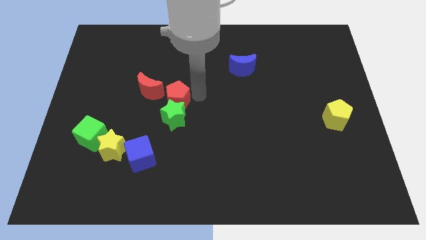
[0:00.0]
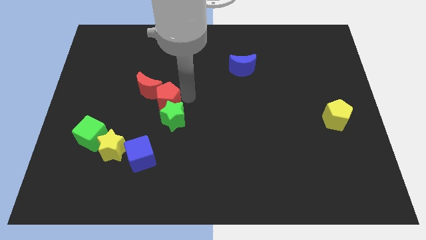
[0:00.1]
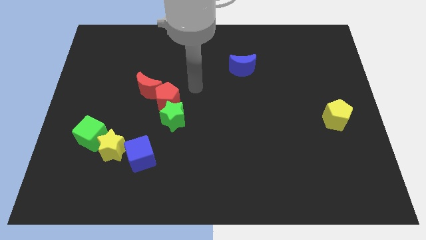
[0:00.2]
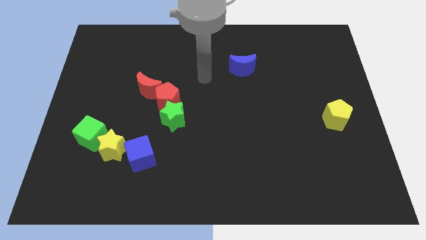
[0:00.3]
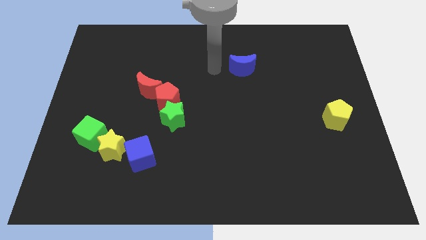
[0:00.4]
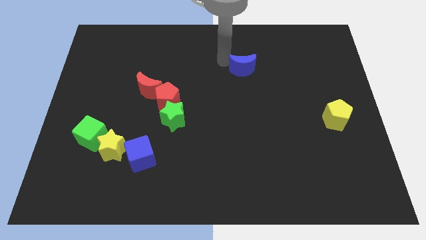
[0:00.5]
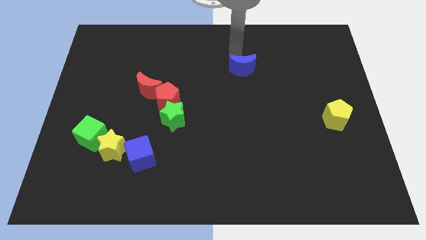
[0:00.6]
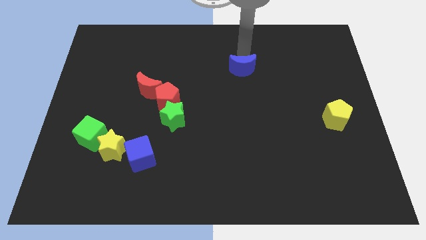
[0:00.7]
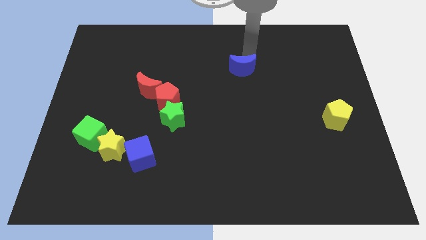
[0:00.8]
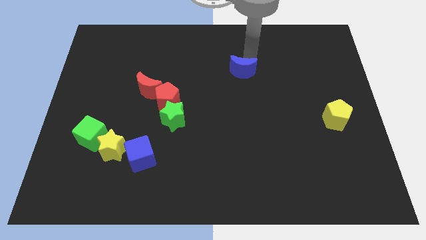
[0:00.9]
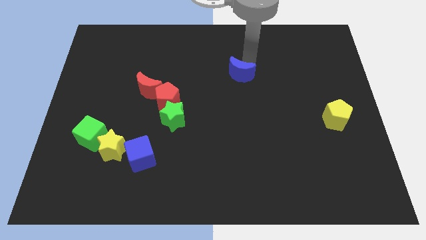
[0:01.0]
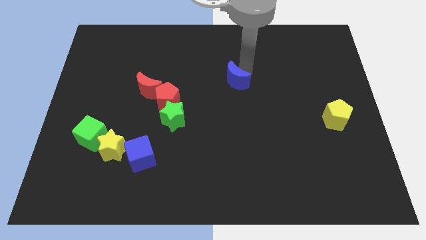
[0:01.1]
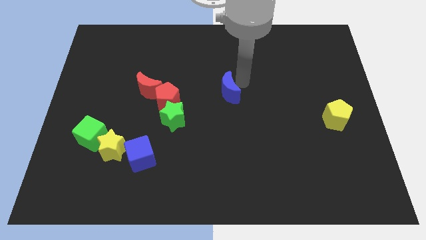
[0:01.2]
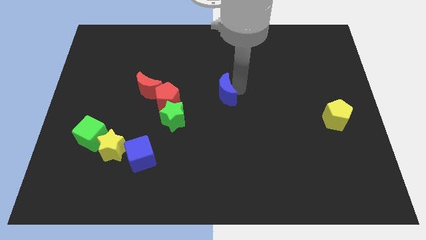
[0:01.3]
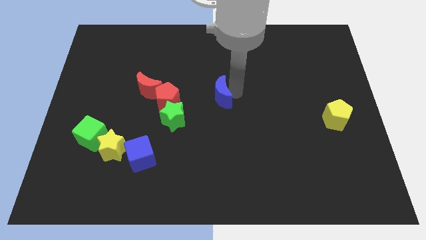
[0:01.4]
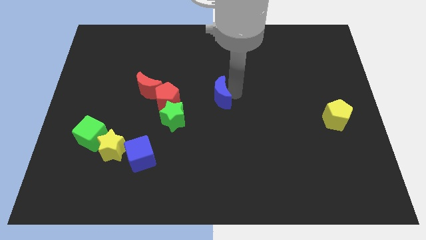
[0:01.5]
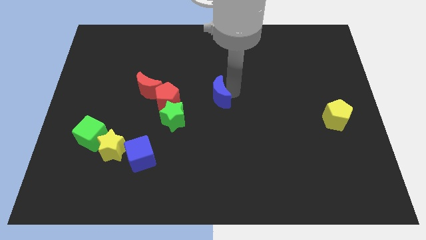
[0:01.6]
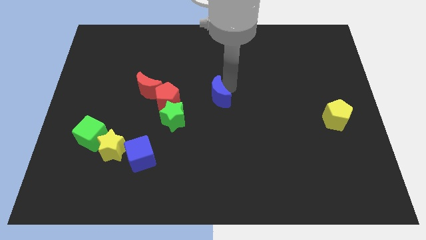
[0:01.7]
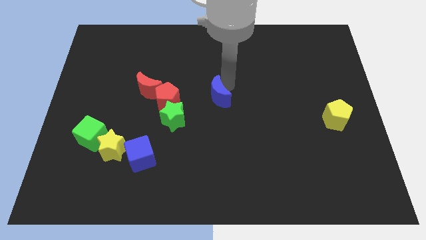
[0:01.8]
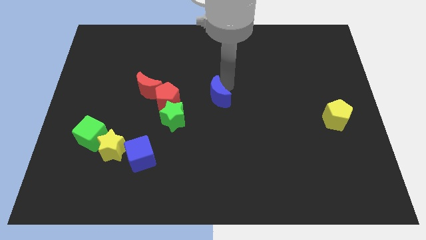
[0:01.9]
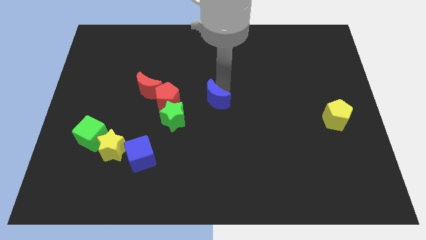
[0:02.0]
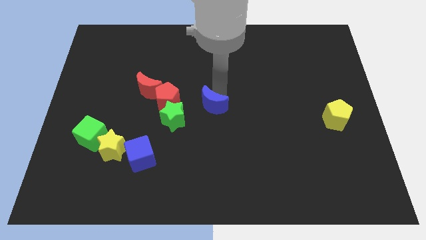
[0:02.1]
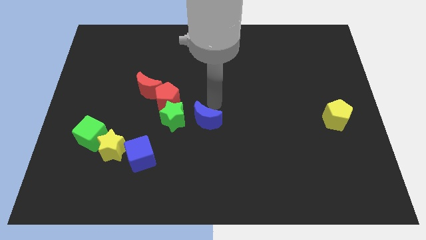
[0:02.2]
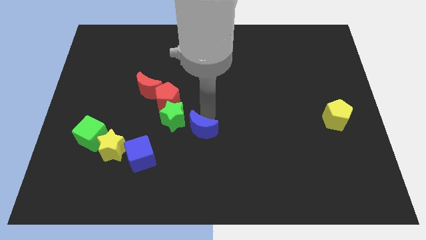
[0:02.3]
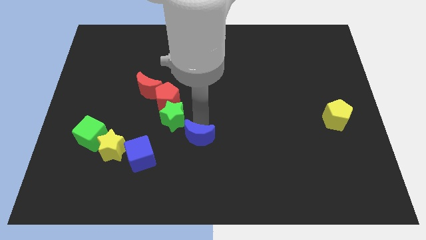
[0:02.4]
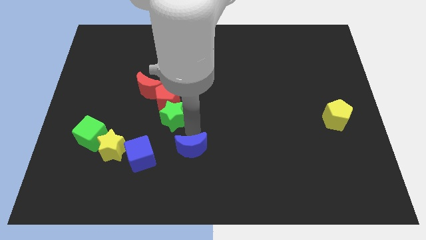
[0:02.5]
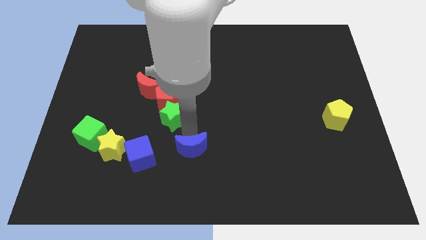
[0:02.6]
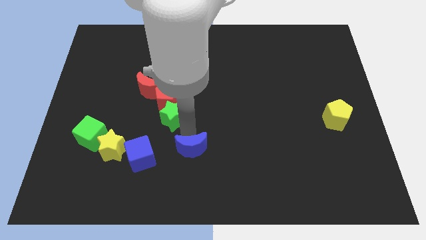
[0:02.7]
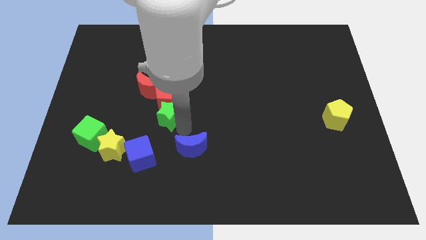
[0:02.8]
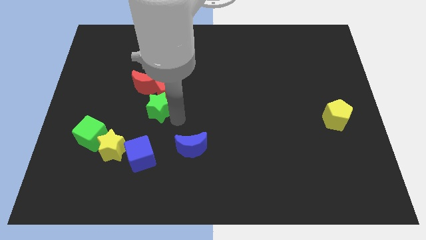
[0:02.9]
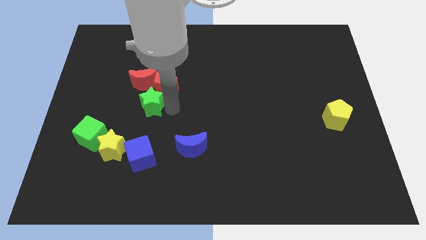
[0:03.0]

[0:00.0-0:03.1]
place the blue moon to the bottom center of the board

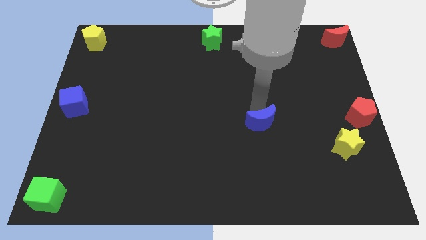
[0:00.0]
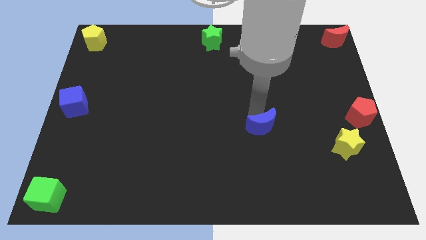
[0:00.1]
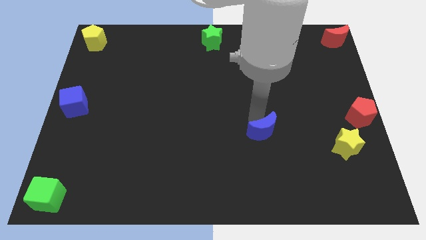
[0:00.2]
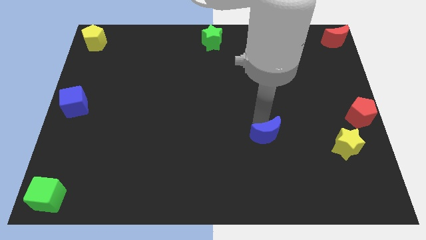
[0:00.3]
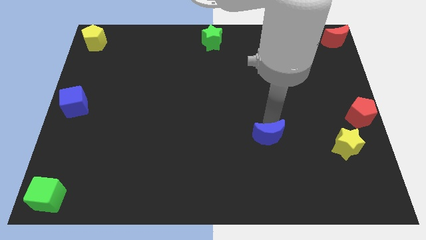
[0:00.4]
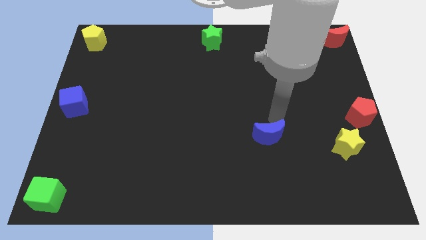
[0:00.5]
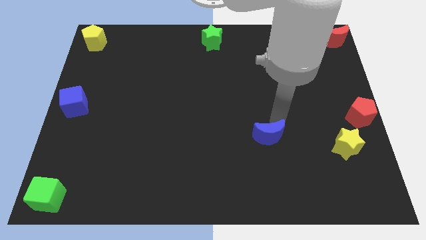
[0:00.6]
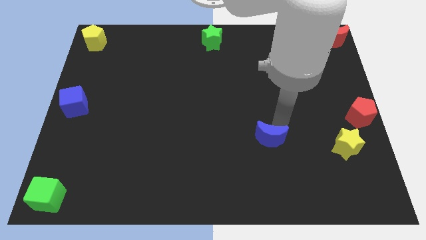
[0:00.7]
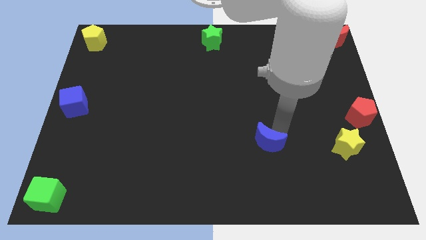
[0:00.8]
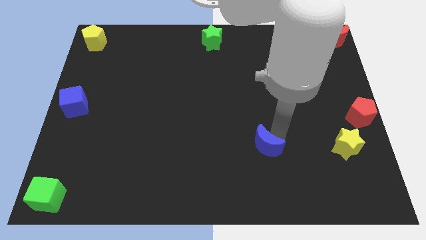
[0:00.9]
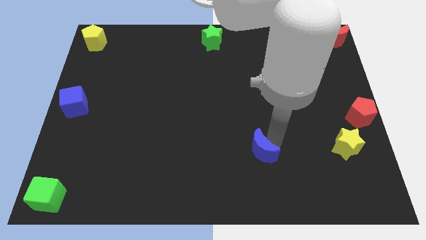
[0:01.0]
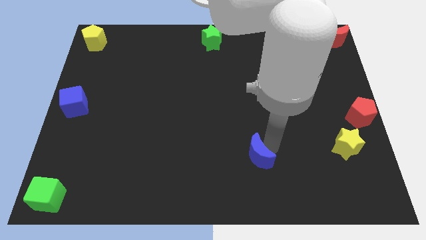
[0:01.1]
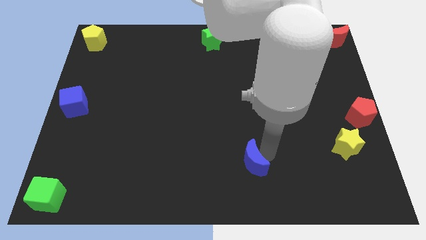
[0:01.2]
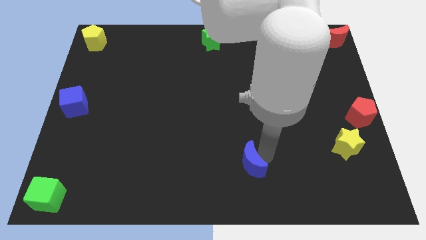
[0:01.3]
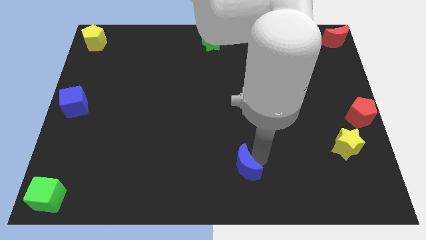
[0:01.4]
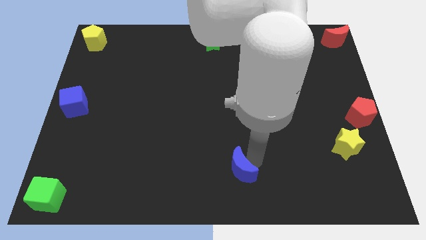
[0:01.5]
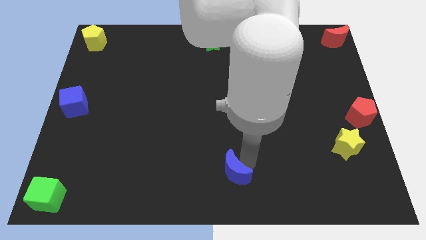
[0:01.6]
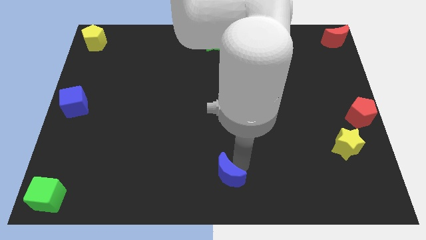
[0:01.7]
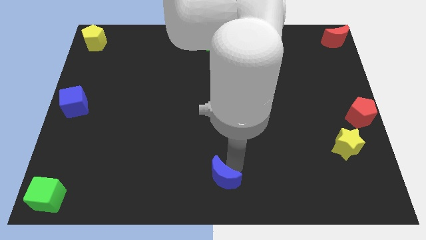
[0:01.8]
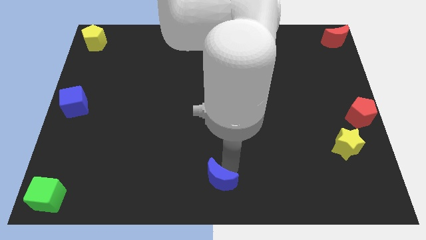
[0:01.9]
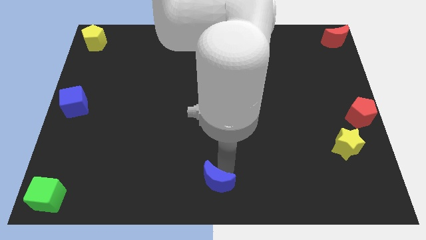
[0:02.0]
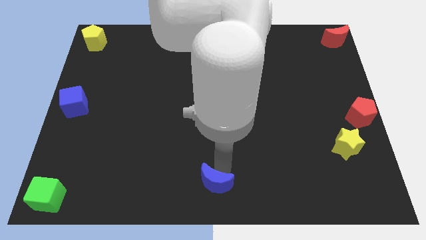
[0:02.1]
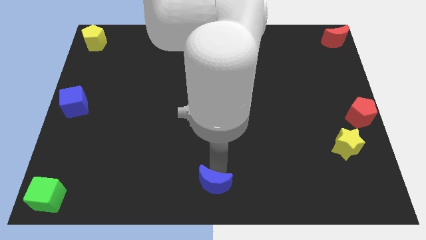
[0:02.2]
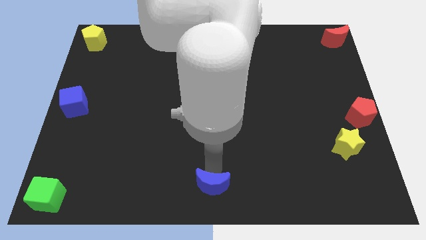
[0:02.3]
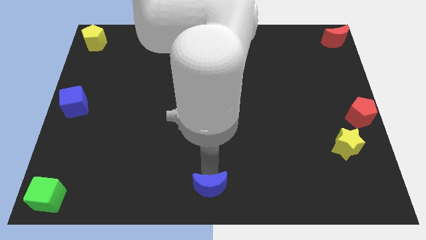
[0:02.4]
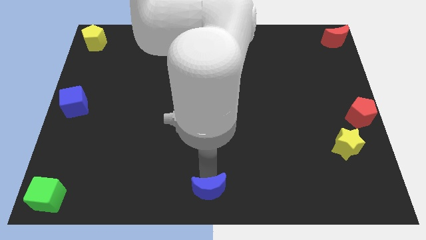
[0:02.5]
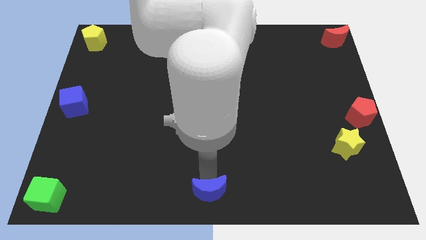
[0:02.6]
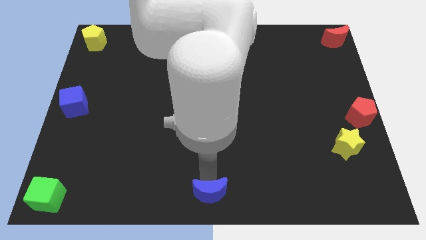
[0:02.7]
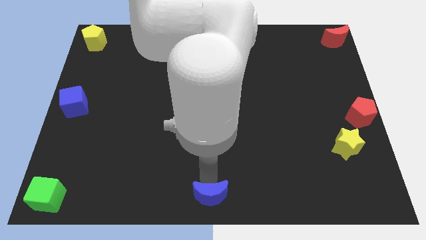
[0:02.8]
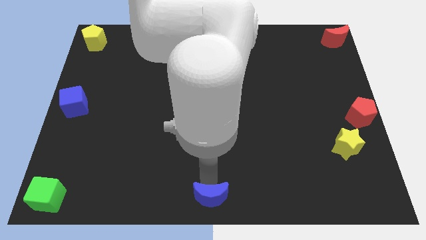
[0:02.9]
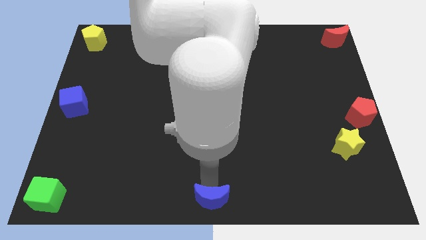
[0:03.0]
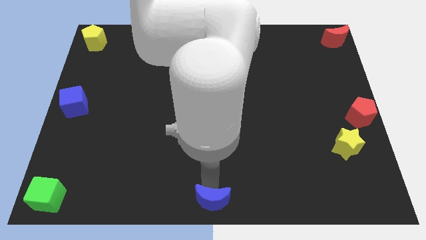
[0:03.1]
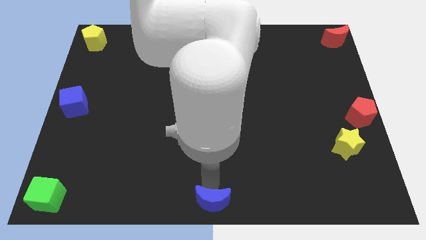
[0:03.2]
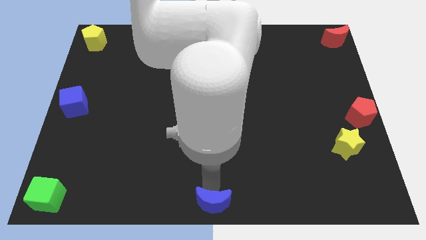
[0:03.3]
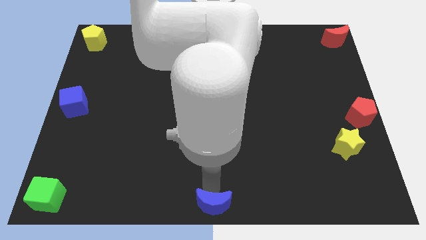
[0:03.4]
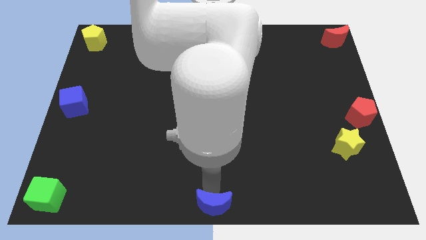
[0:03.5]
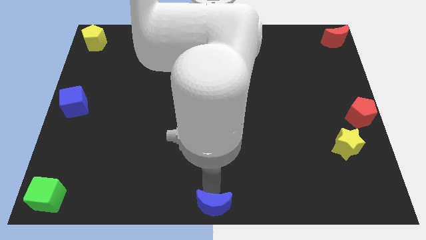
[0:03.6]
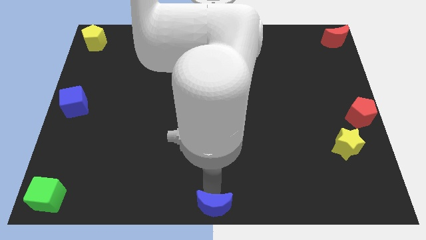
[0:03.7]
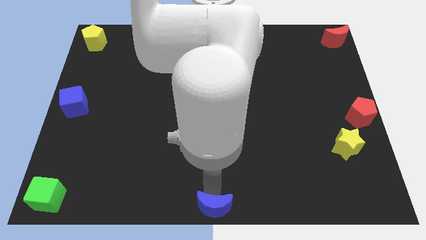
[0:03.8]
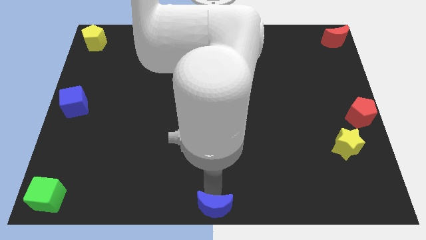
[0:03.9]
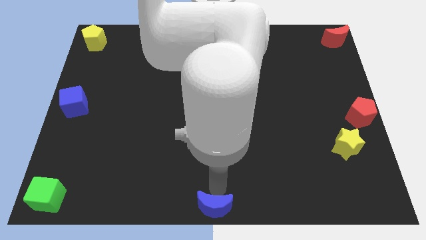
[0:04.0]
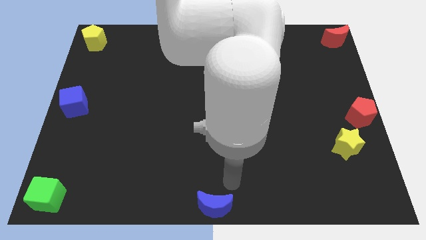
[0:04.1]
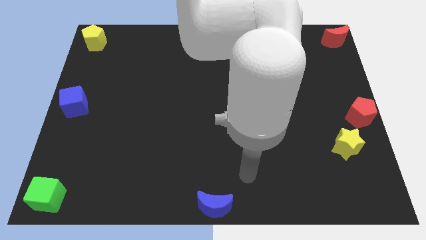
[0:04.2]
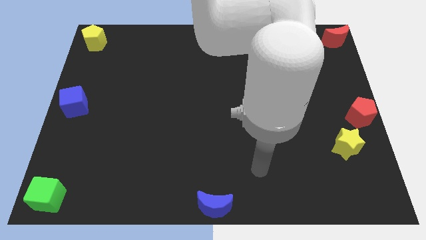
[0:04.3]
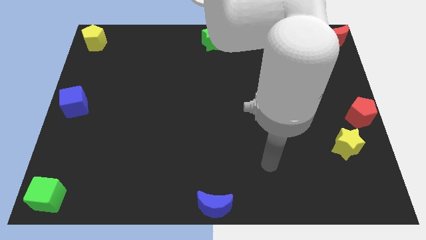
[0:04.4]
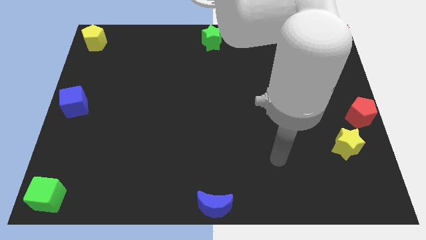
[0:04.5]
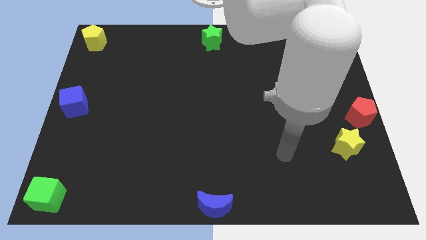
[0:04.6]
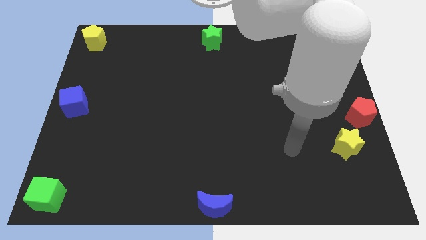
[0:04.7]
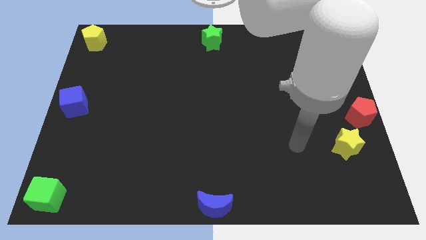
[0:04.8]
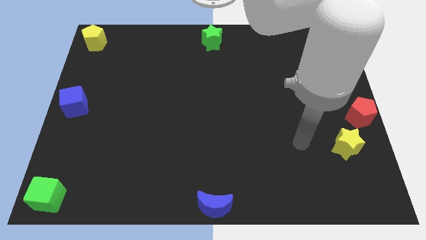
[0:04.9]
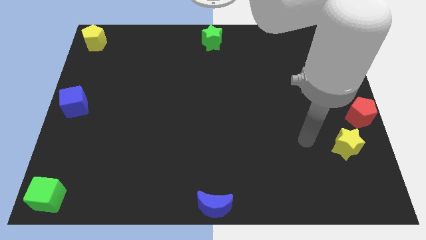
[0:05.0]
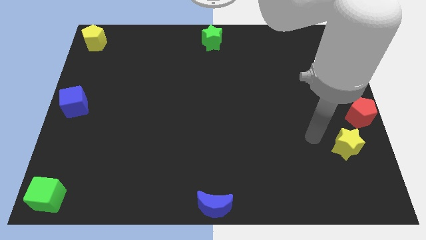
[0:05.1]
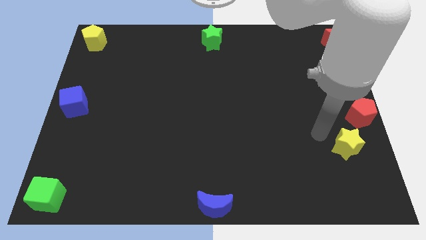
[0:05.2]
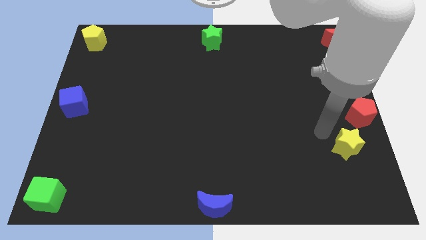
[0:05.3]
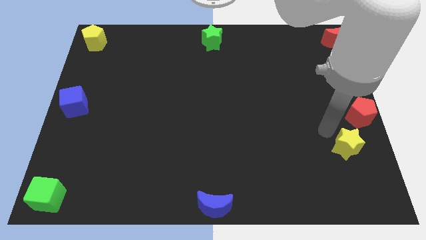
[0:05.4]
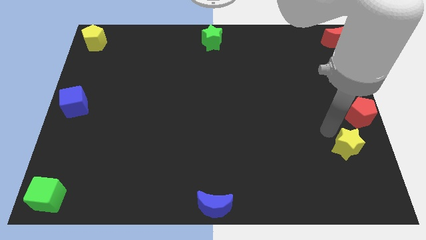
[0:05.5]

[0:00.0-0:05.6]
slide the blue crescent to the bottom center of the board

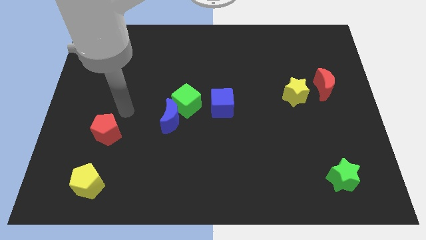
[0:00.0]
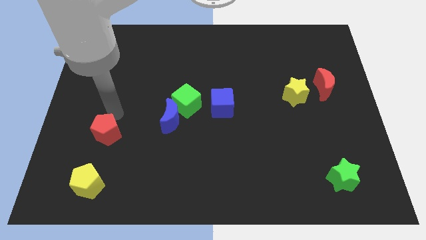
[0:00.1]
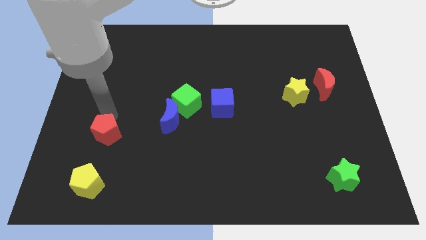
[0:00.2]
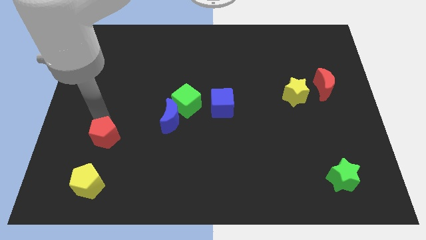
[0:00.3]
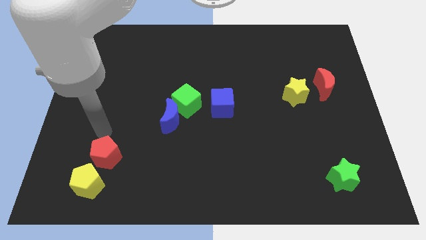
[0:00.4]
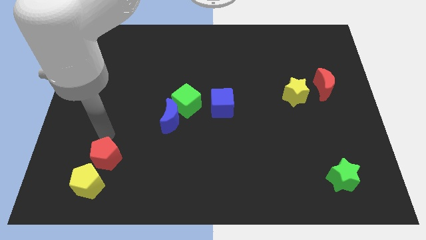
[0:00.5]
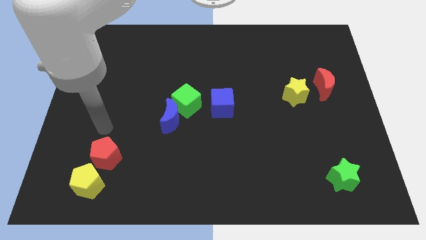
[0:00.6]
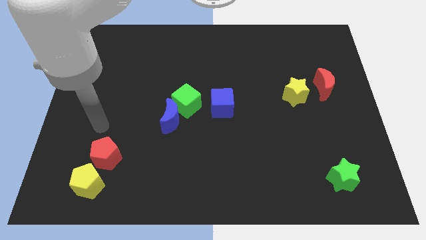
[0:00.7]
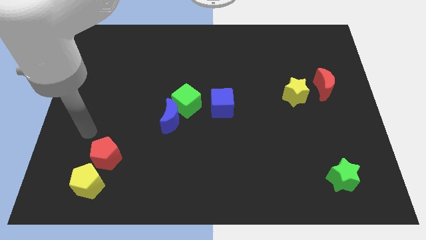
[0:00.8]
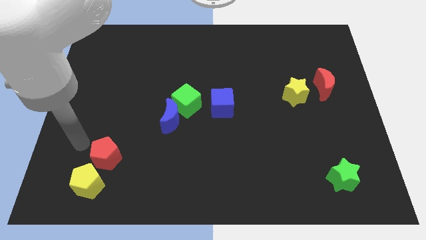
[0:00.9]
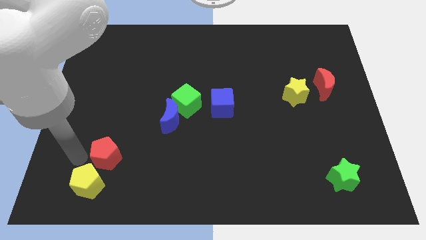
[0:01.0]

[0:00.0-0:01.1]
push red pentagon towards yellow pentagon
